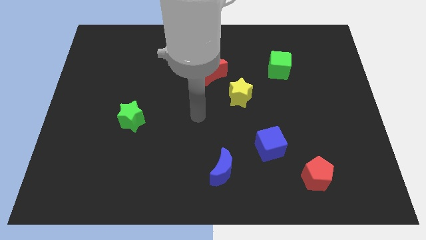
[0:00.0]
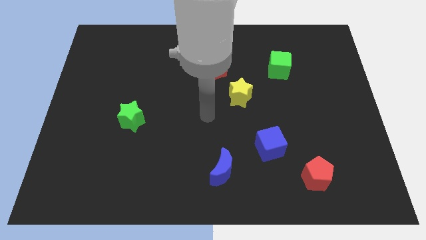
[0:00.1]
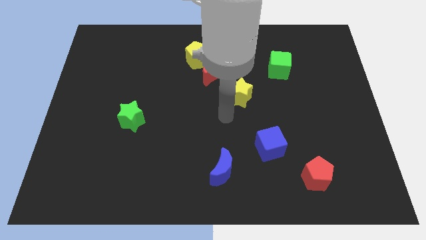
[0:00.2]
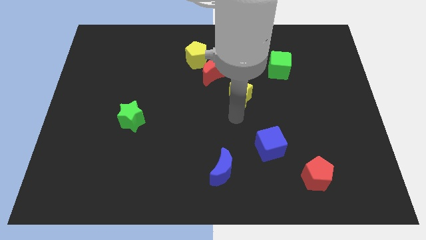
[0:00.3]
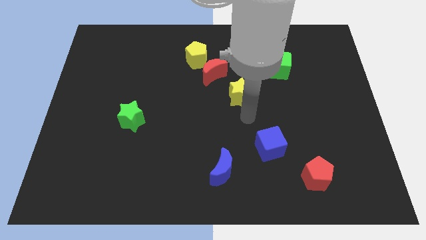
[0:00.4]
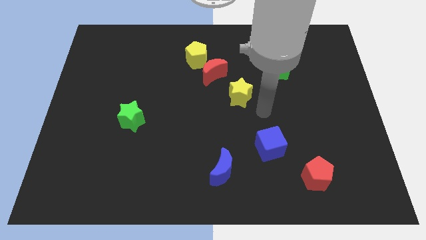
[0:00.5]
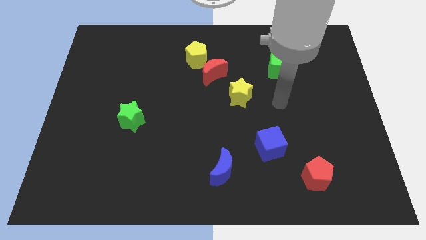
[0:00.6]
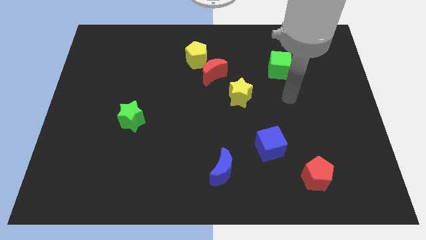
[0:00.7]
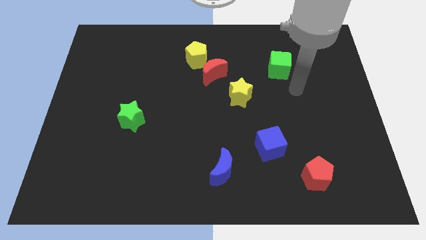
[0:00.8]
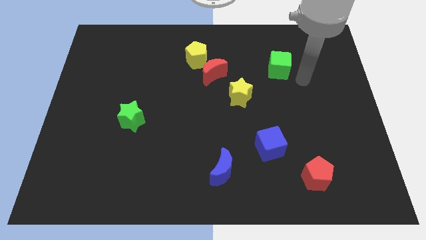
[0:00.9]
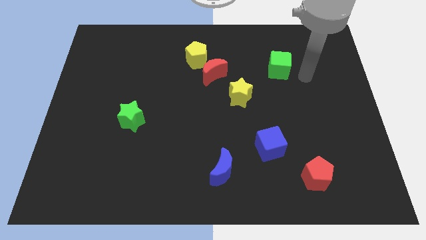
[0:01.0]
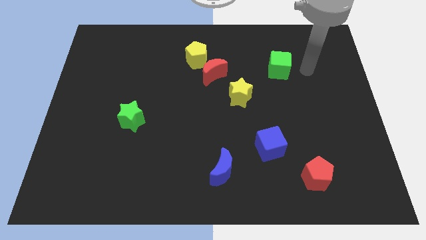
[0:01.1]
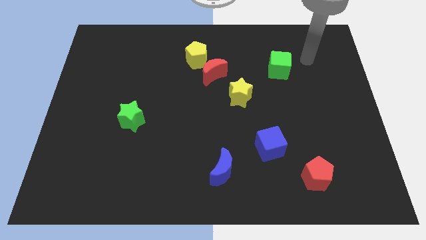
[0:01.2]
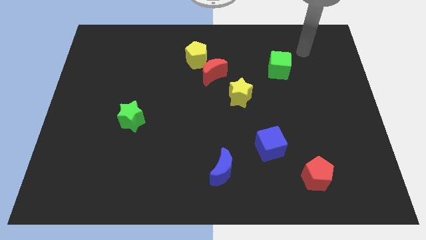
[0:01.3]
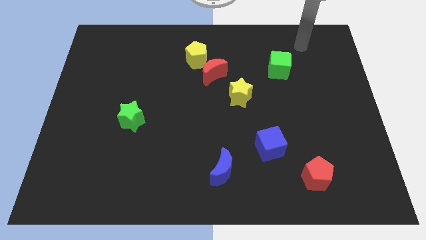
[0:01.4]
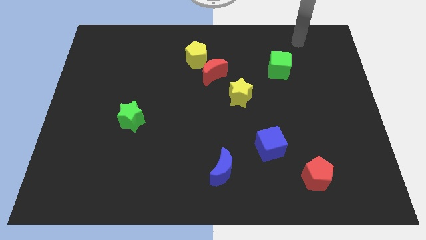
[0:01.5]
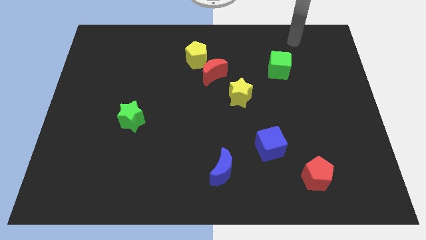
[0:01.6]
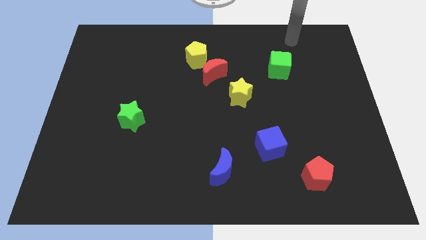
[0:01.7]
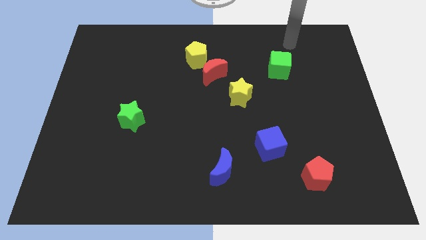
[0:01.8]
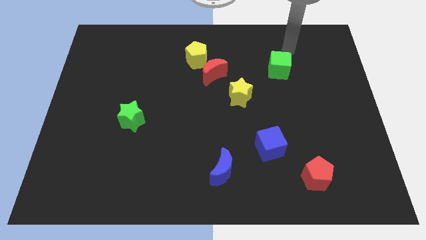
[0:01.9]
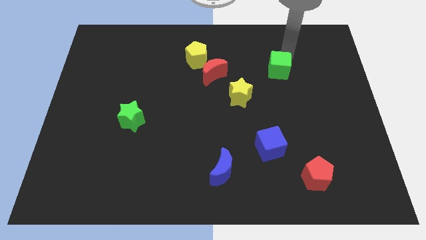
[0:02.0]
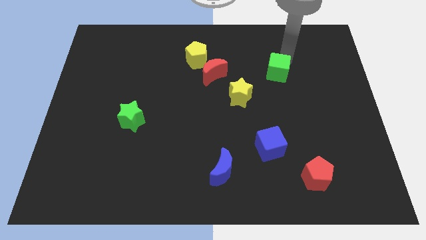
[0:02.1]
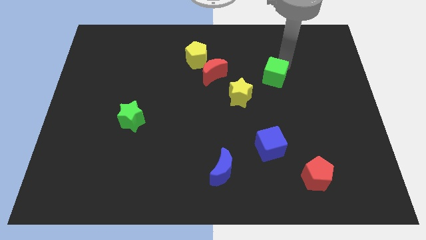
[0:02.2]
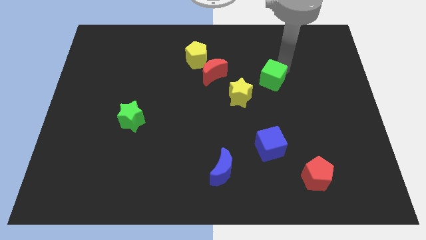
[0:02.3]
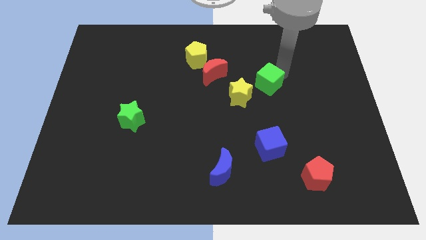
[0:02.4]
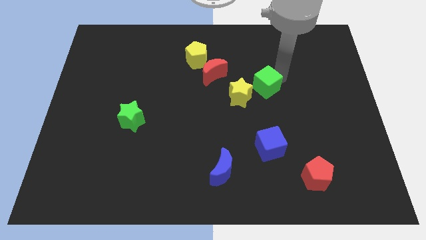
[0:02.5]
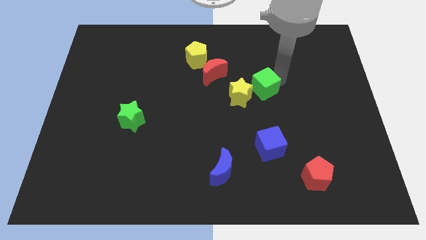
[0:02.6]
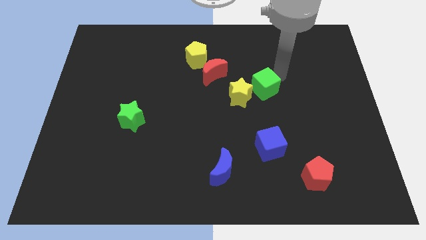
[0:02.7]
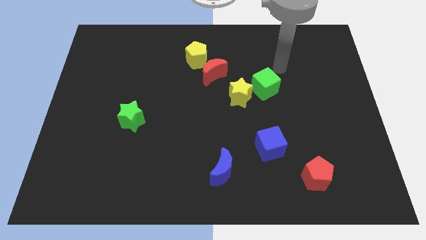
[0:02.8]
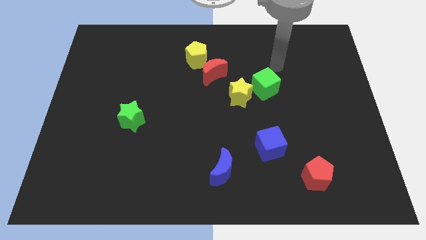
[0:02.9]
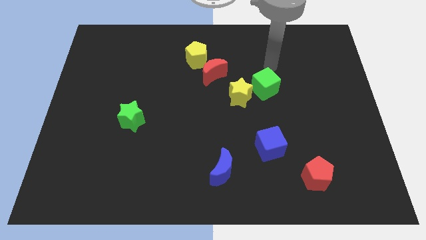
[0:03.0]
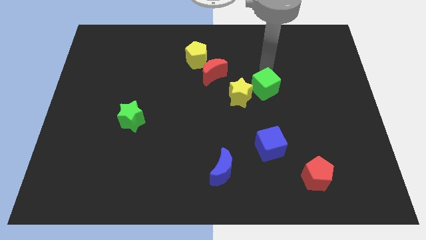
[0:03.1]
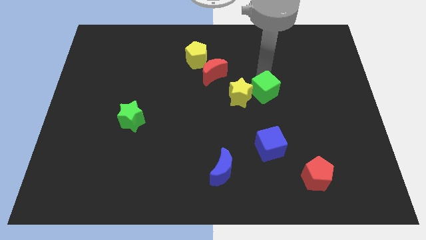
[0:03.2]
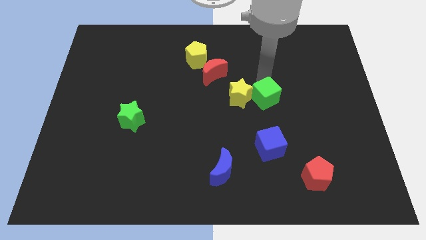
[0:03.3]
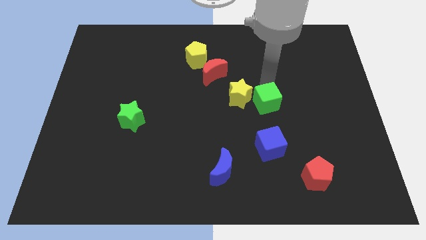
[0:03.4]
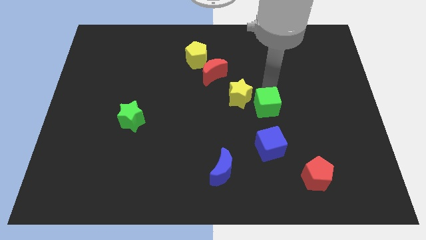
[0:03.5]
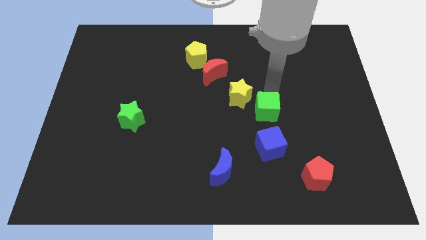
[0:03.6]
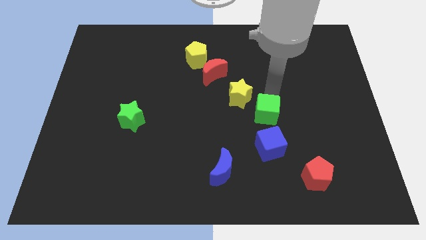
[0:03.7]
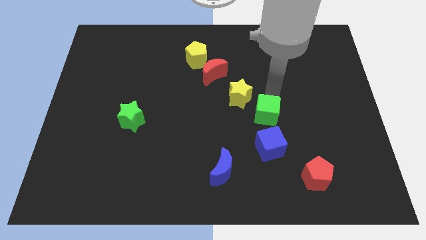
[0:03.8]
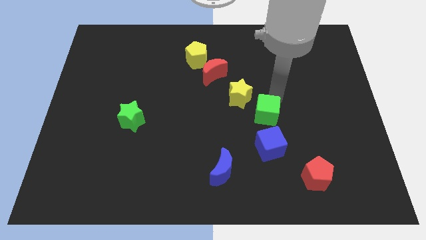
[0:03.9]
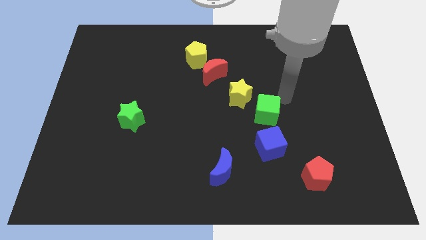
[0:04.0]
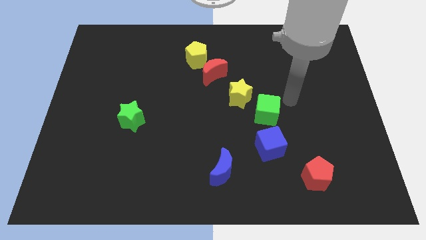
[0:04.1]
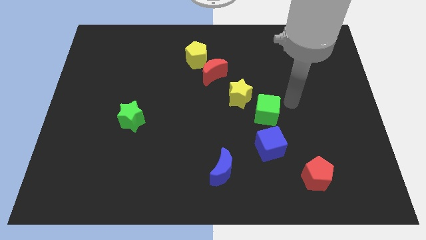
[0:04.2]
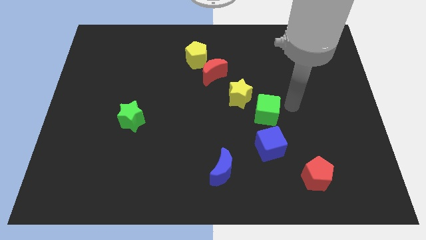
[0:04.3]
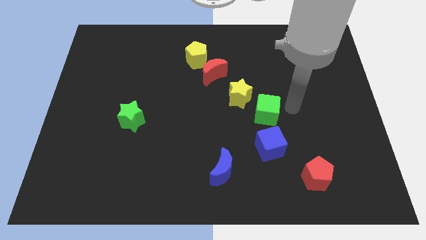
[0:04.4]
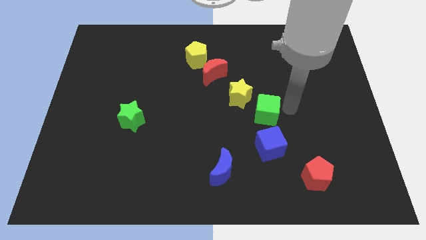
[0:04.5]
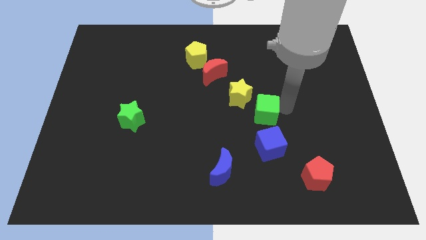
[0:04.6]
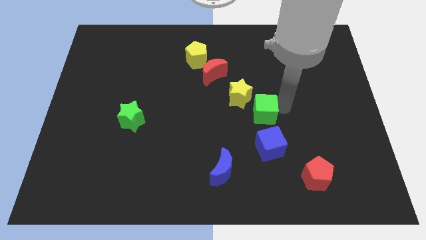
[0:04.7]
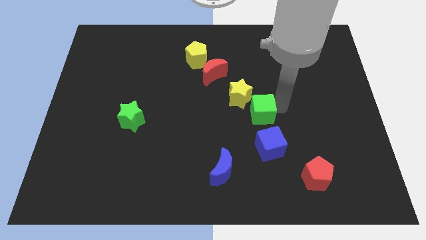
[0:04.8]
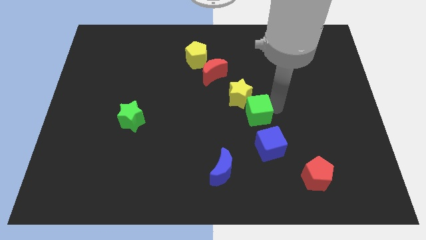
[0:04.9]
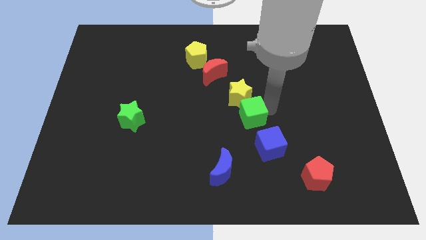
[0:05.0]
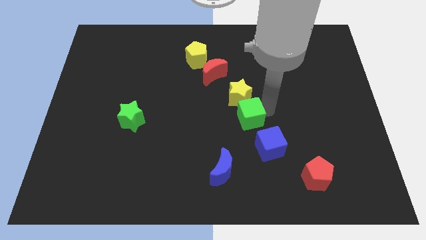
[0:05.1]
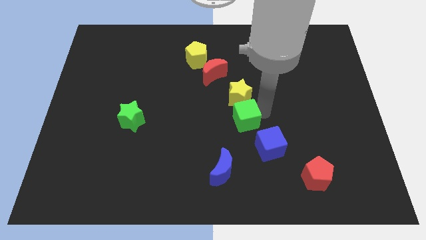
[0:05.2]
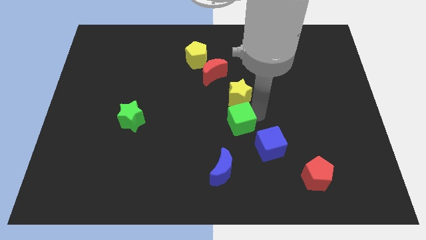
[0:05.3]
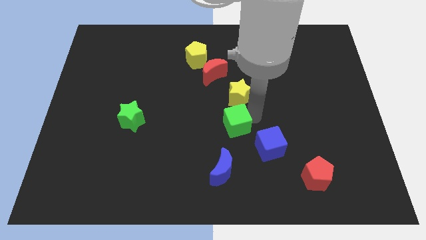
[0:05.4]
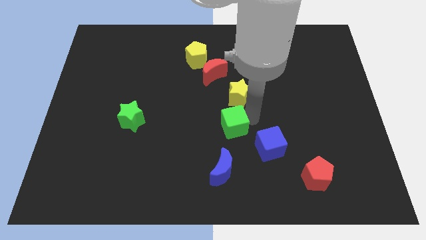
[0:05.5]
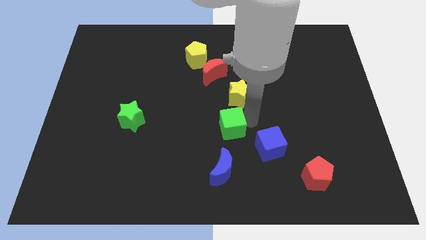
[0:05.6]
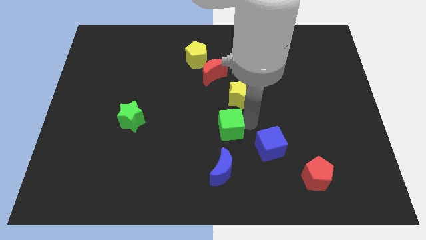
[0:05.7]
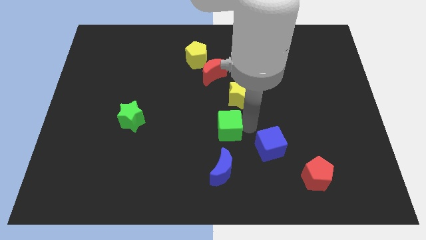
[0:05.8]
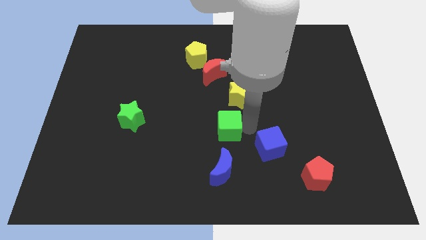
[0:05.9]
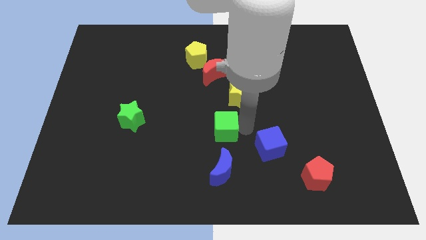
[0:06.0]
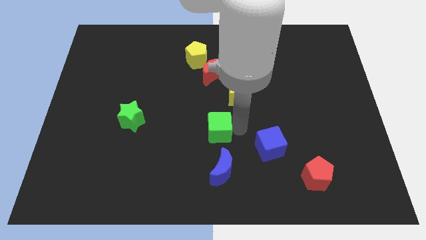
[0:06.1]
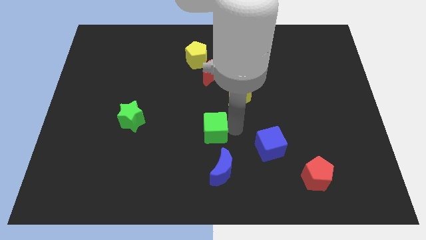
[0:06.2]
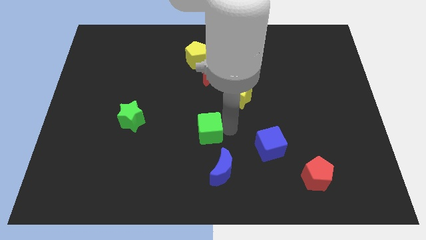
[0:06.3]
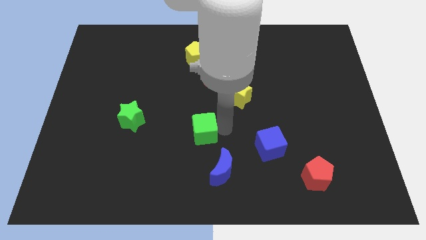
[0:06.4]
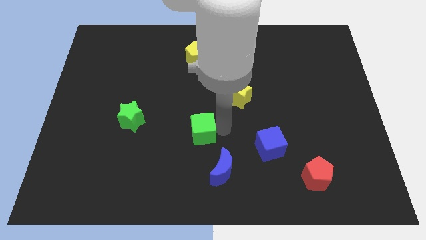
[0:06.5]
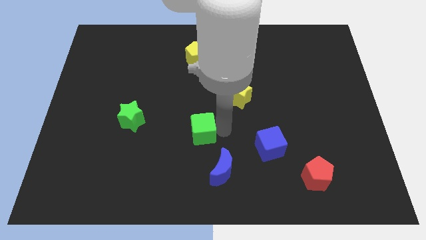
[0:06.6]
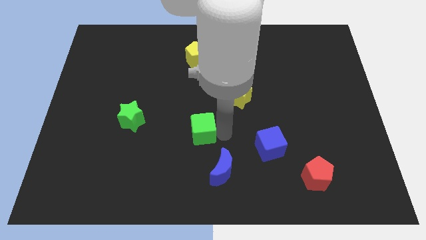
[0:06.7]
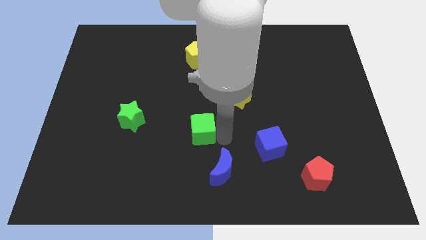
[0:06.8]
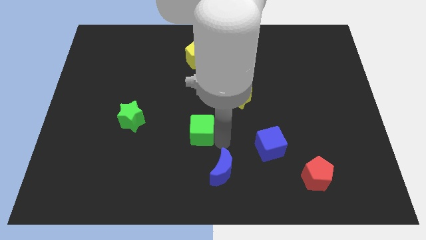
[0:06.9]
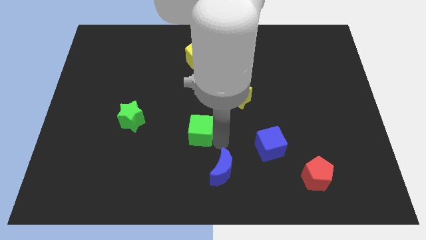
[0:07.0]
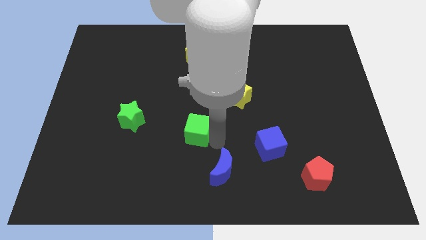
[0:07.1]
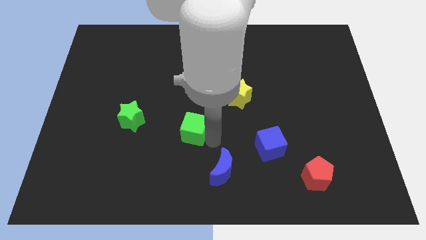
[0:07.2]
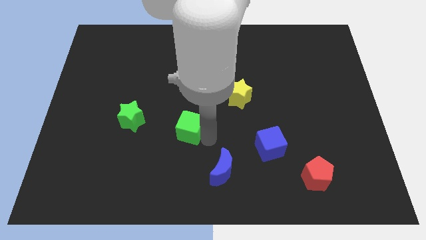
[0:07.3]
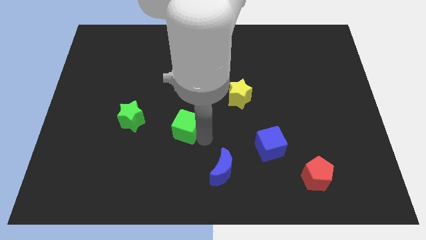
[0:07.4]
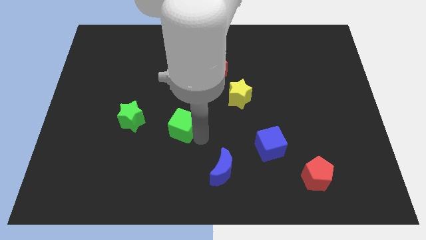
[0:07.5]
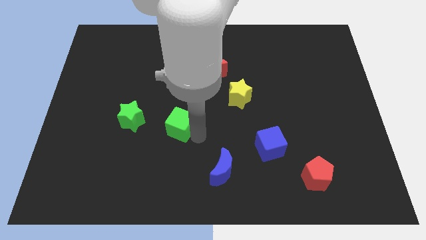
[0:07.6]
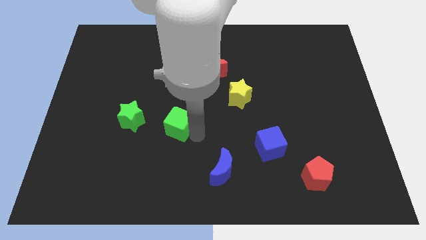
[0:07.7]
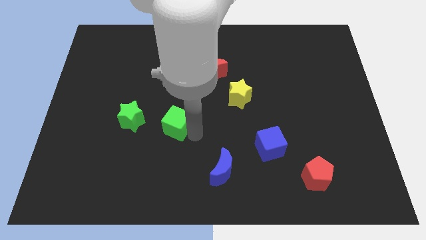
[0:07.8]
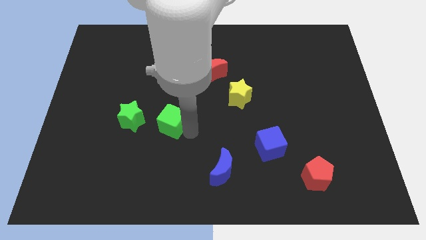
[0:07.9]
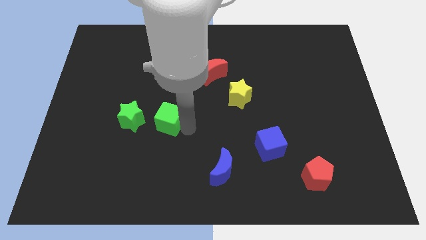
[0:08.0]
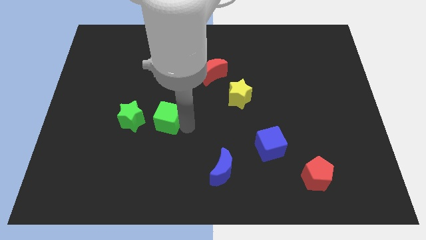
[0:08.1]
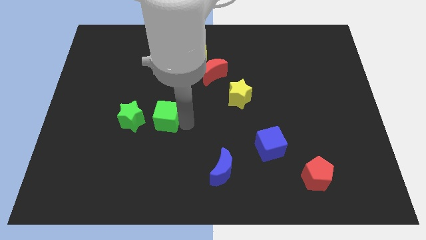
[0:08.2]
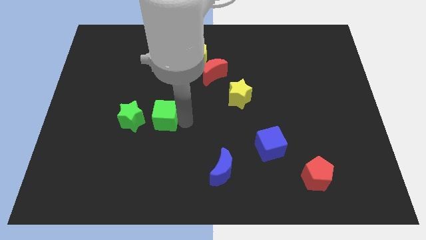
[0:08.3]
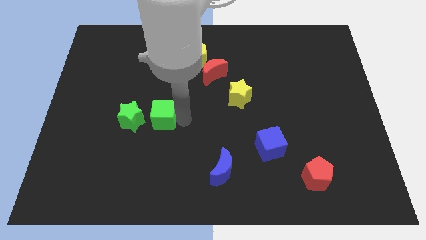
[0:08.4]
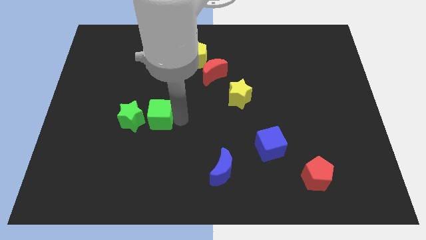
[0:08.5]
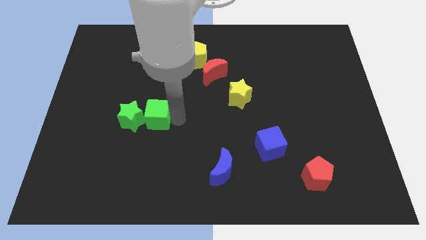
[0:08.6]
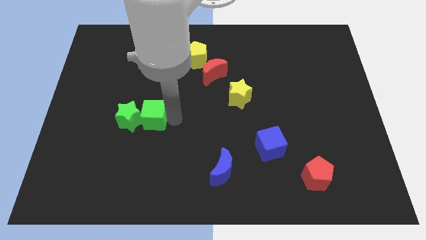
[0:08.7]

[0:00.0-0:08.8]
move the green cube next to the green star

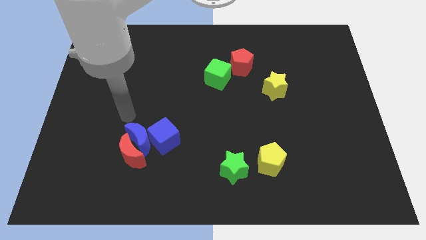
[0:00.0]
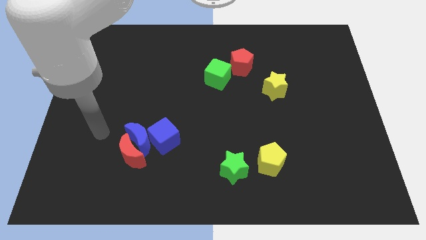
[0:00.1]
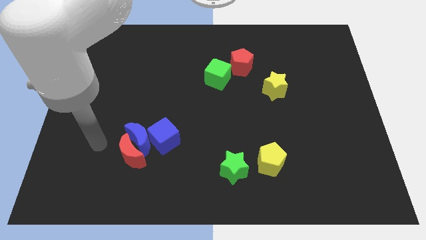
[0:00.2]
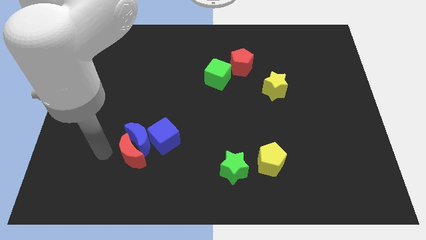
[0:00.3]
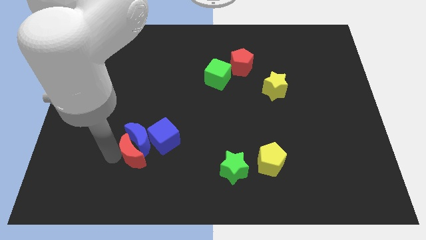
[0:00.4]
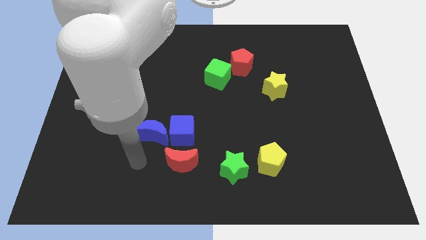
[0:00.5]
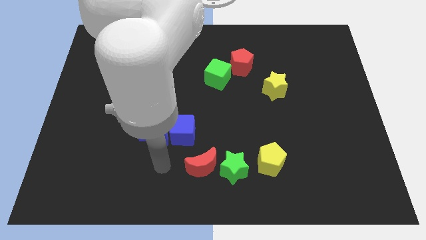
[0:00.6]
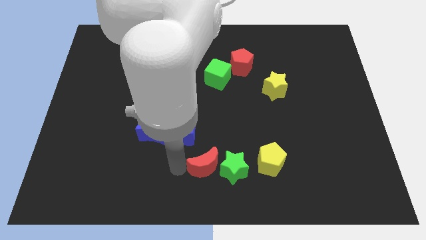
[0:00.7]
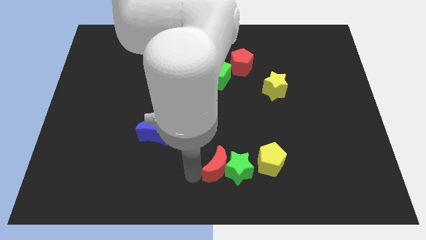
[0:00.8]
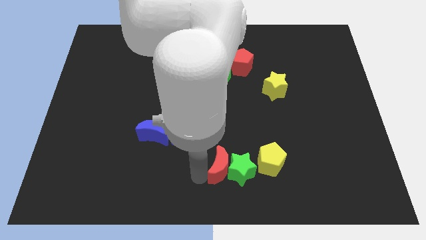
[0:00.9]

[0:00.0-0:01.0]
slide the red moon next to the green star
